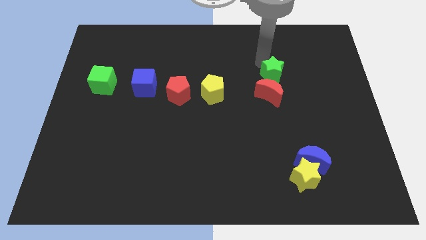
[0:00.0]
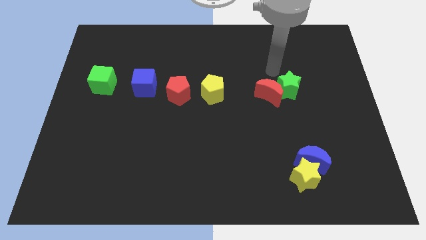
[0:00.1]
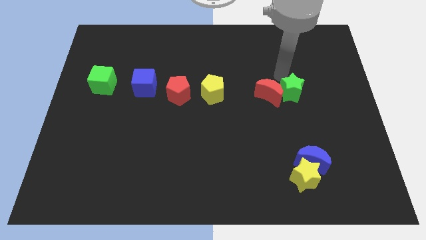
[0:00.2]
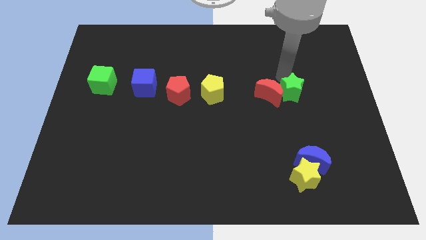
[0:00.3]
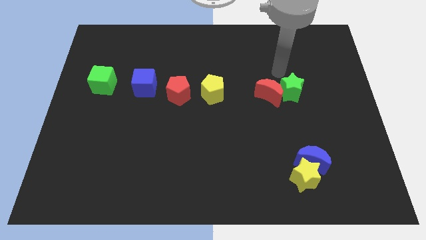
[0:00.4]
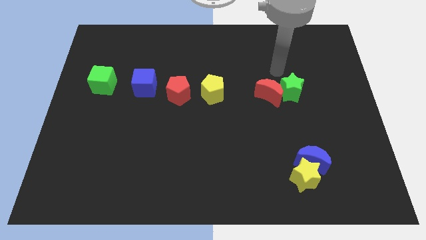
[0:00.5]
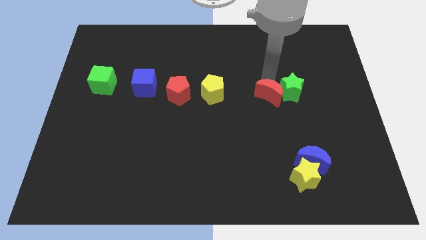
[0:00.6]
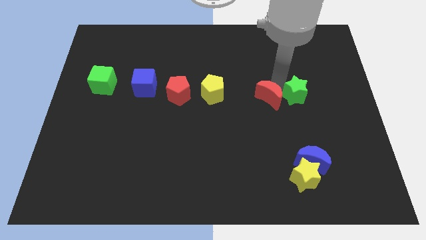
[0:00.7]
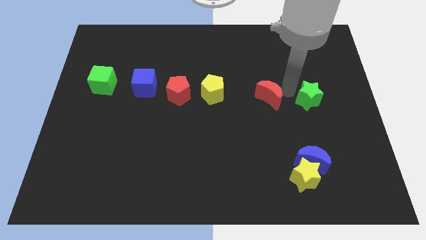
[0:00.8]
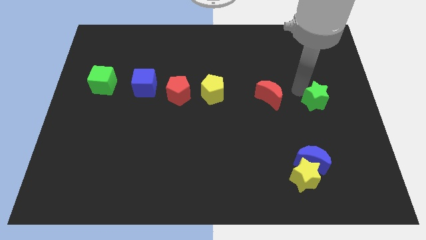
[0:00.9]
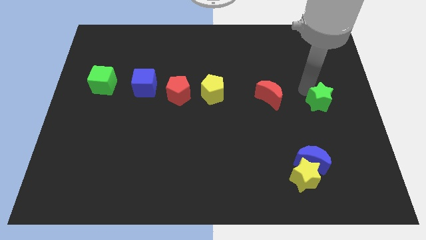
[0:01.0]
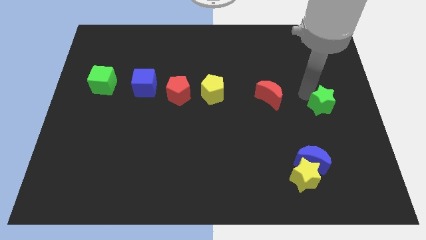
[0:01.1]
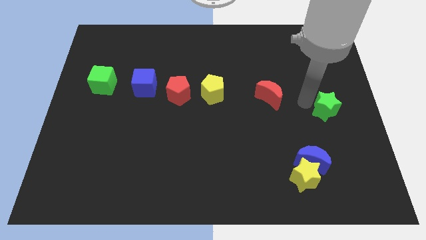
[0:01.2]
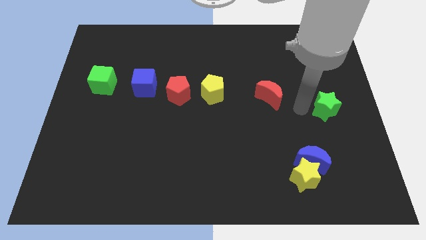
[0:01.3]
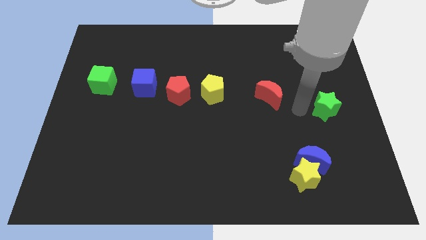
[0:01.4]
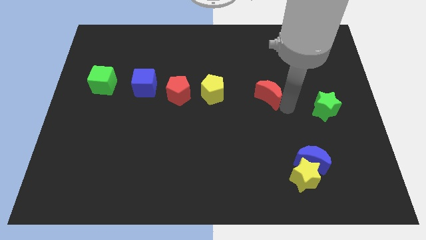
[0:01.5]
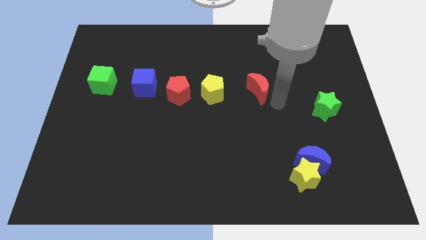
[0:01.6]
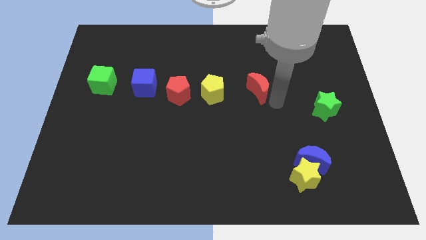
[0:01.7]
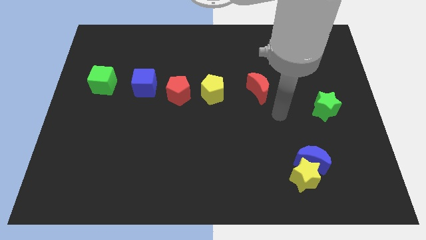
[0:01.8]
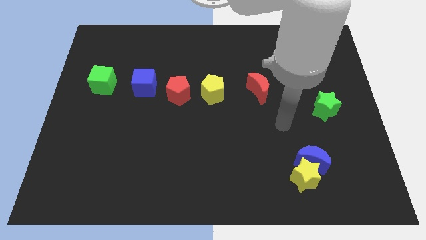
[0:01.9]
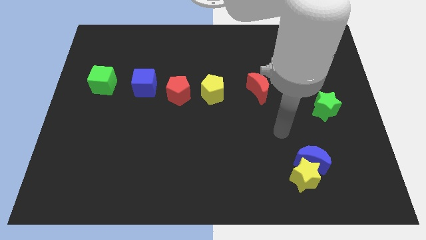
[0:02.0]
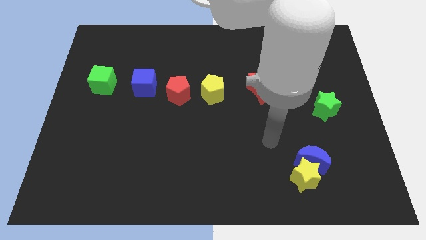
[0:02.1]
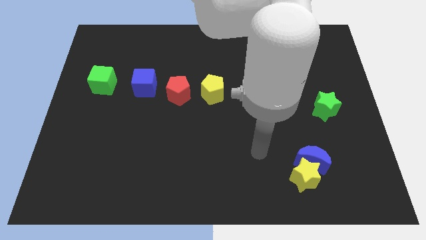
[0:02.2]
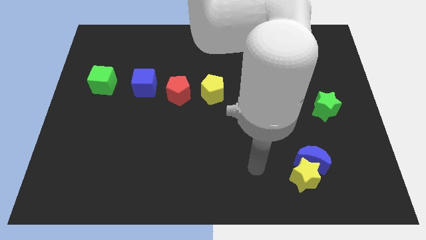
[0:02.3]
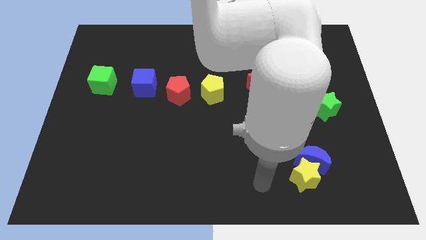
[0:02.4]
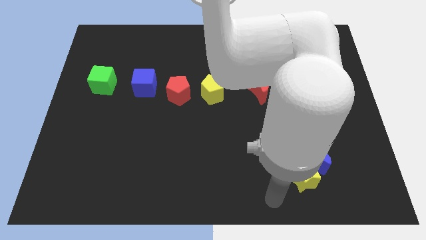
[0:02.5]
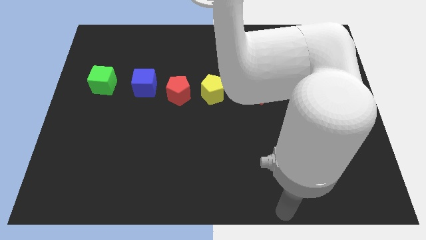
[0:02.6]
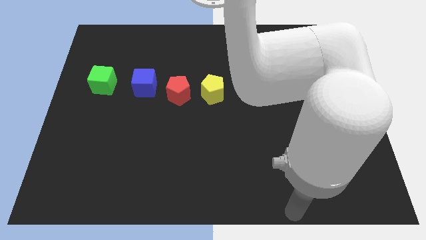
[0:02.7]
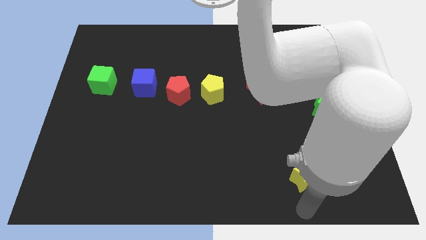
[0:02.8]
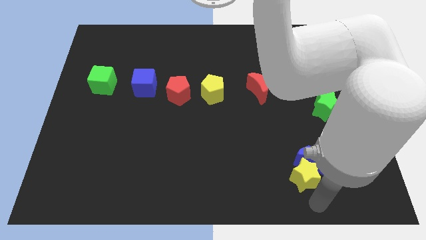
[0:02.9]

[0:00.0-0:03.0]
move away the green star from the red crescent

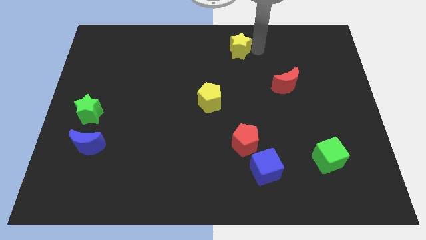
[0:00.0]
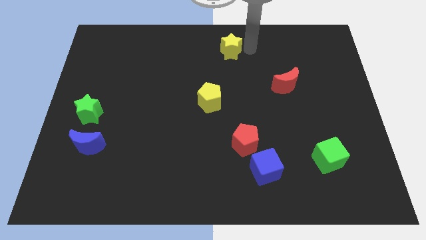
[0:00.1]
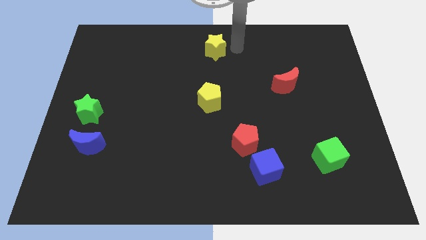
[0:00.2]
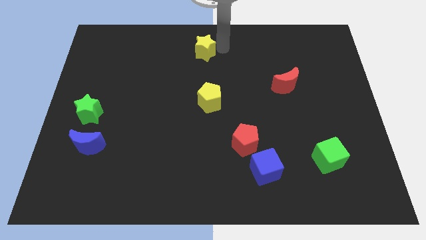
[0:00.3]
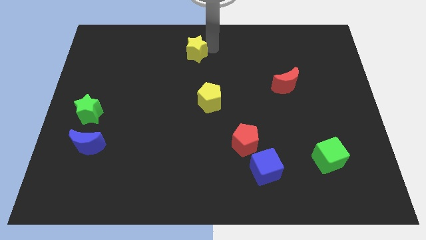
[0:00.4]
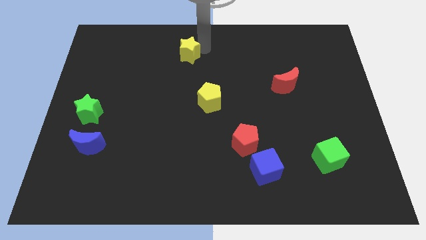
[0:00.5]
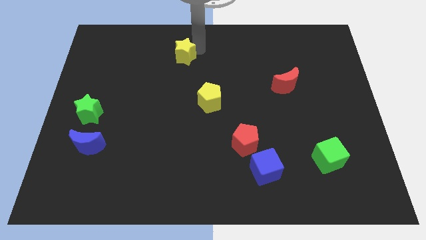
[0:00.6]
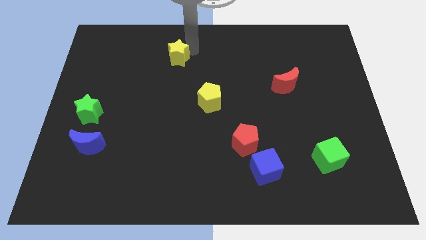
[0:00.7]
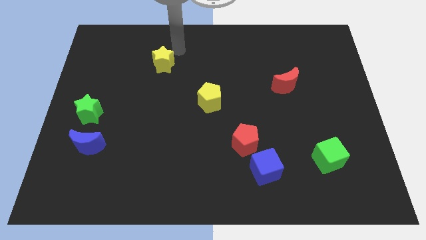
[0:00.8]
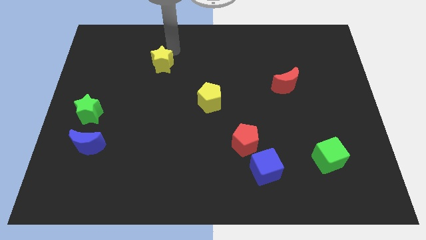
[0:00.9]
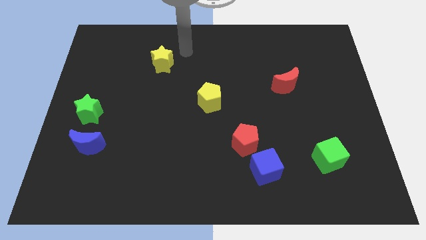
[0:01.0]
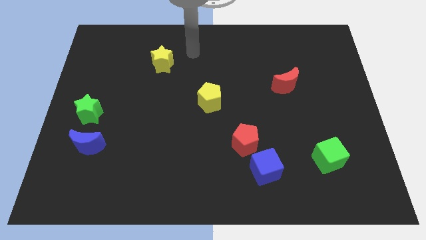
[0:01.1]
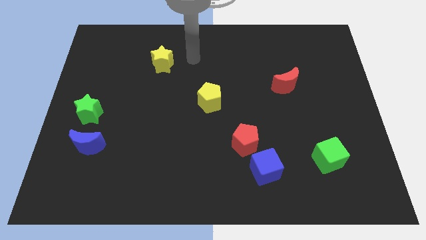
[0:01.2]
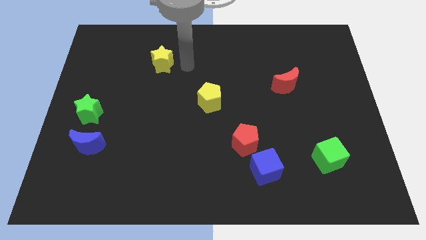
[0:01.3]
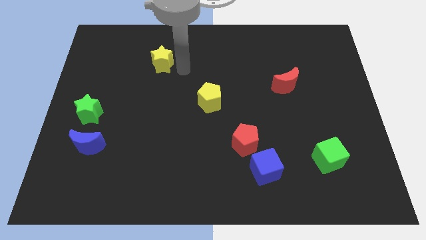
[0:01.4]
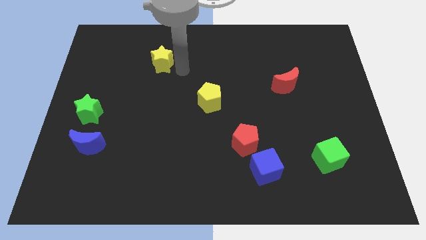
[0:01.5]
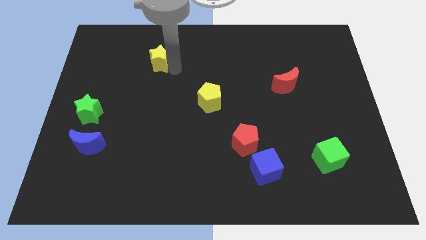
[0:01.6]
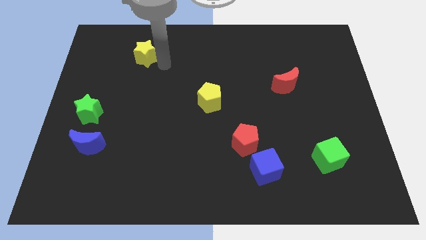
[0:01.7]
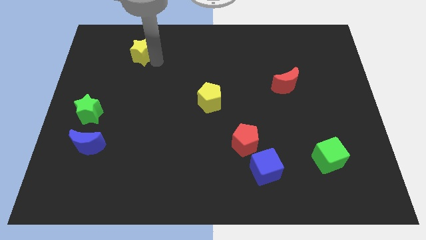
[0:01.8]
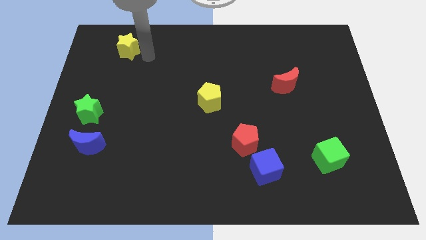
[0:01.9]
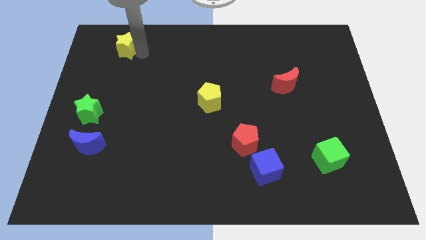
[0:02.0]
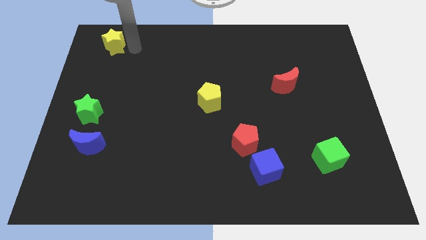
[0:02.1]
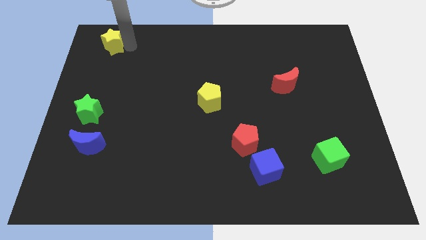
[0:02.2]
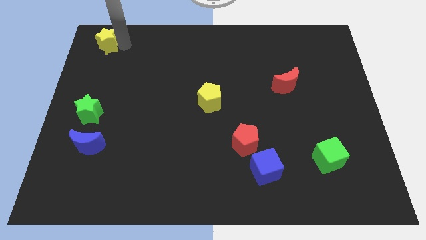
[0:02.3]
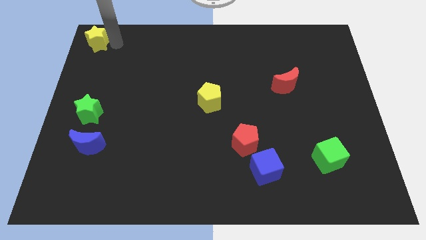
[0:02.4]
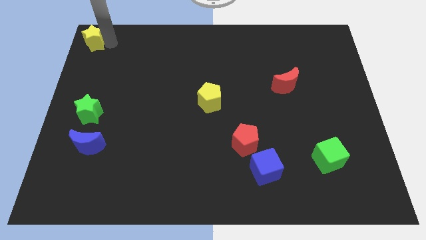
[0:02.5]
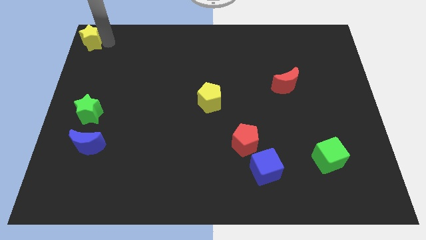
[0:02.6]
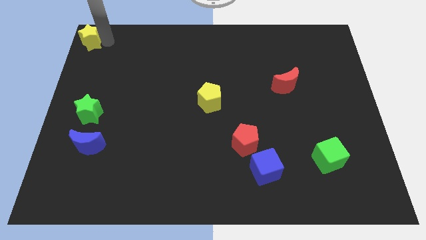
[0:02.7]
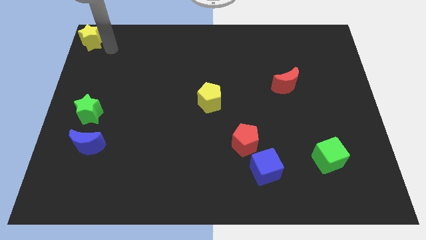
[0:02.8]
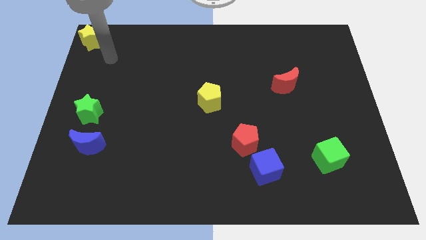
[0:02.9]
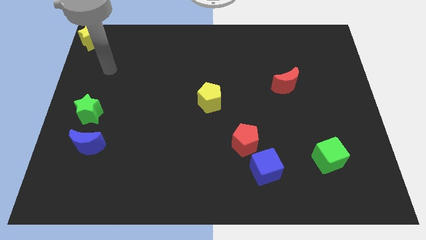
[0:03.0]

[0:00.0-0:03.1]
push the yellow star to the top left corner

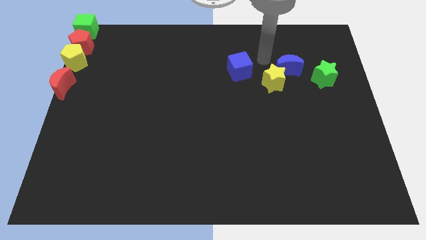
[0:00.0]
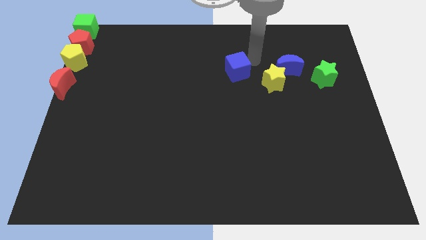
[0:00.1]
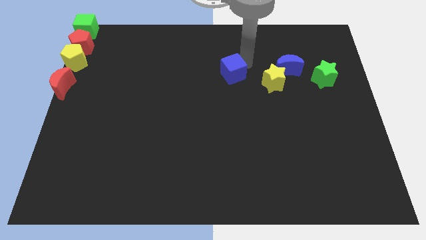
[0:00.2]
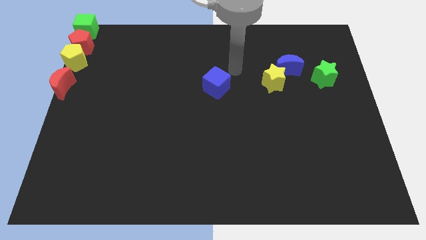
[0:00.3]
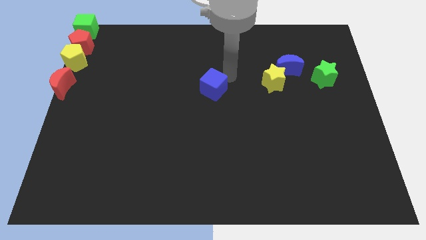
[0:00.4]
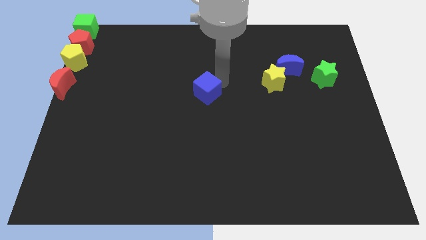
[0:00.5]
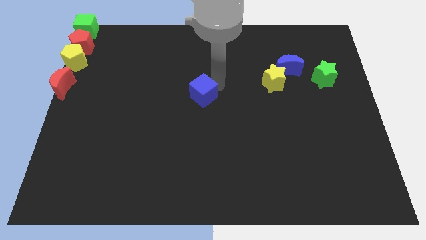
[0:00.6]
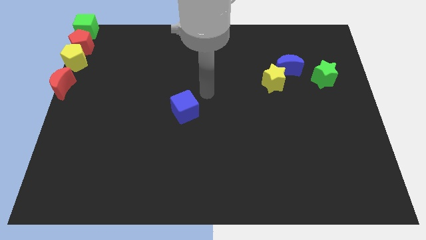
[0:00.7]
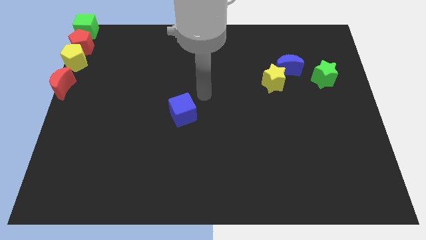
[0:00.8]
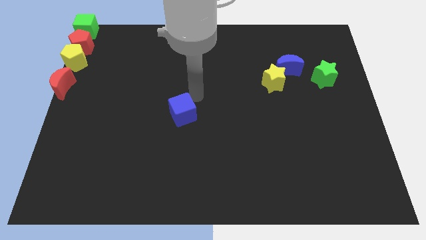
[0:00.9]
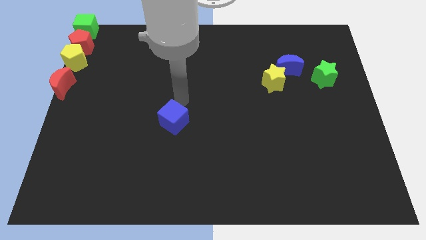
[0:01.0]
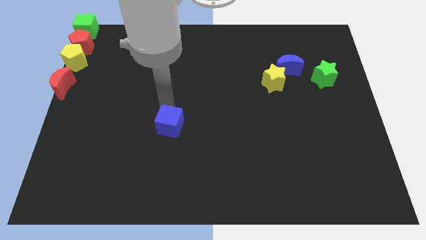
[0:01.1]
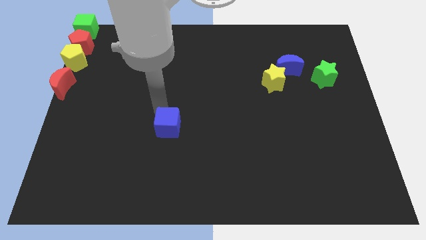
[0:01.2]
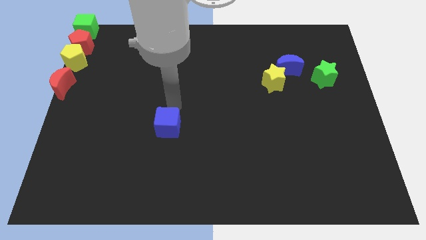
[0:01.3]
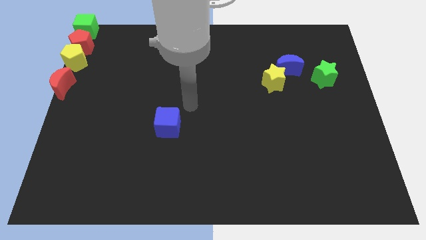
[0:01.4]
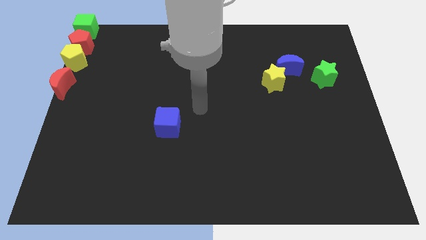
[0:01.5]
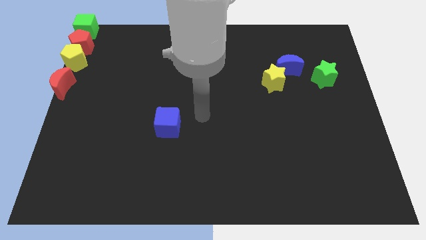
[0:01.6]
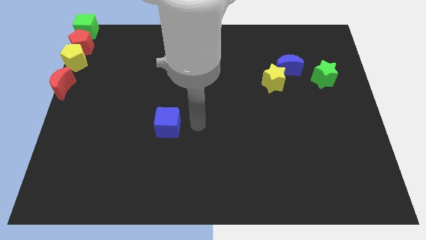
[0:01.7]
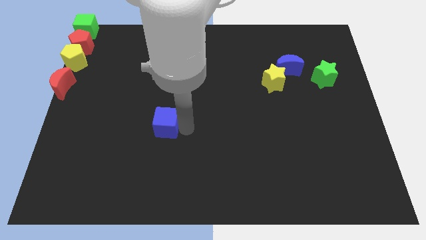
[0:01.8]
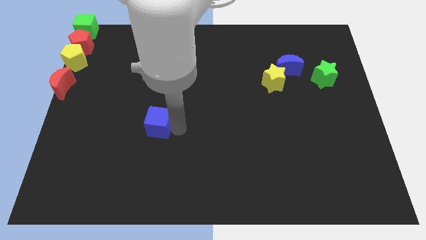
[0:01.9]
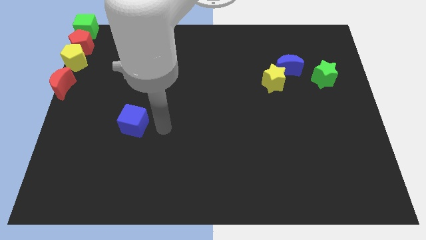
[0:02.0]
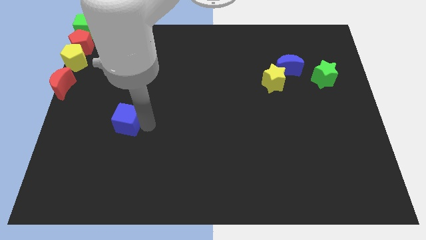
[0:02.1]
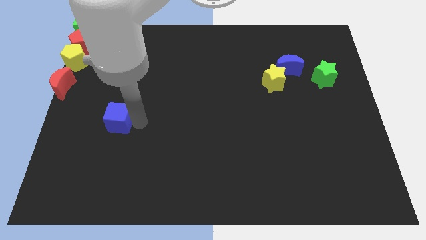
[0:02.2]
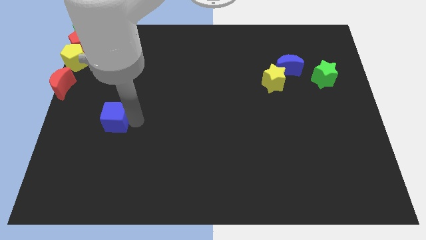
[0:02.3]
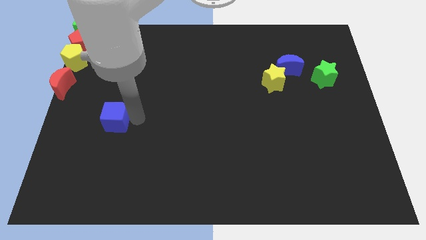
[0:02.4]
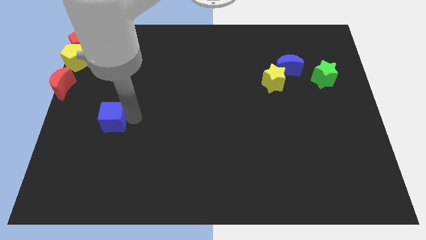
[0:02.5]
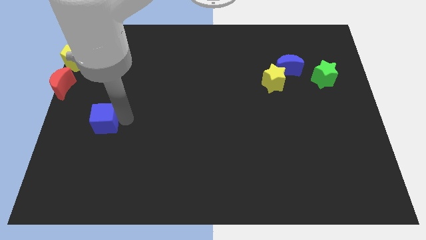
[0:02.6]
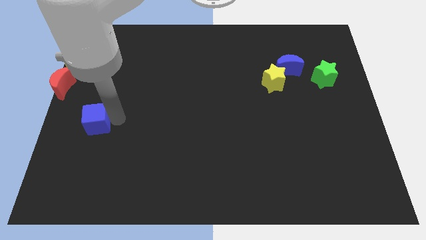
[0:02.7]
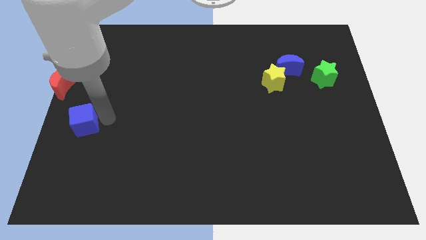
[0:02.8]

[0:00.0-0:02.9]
push the blue cube to the bottom right of the red crescent

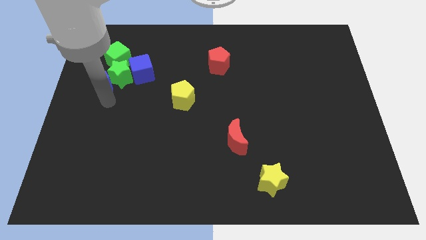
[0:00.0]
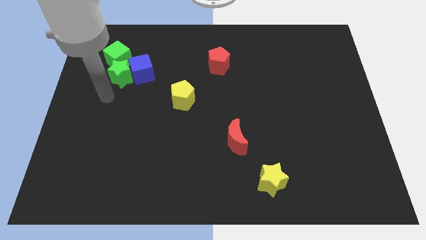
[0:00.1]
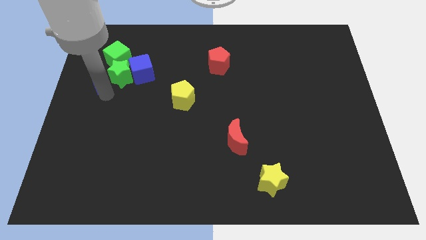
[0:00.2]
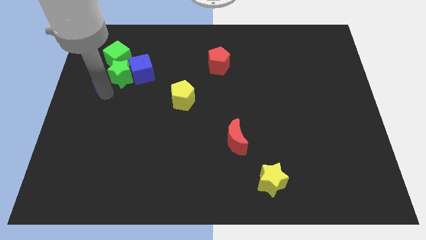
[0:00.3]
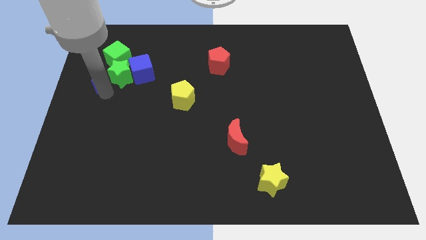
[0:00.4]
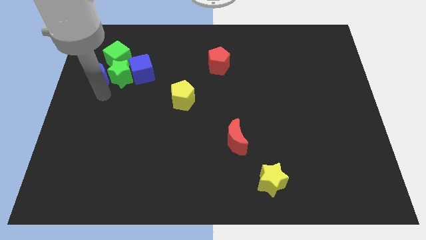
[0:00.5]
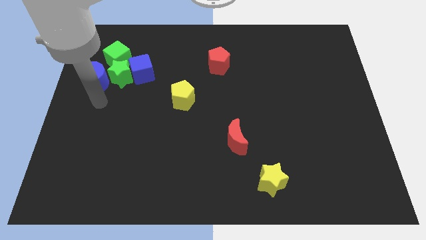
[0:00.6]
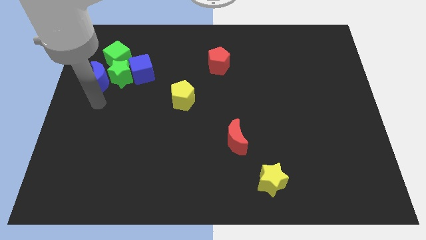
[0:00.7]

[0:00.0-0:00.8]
place blue crescent beside green star
